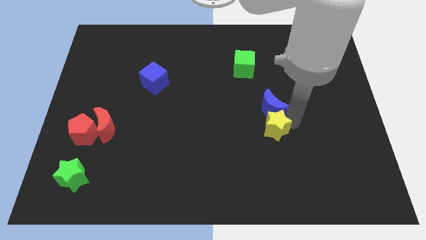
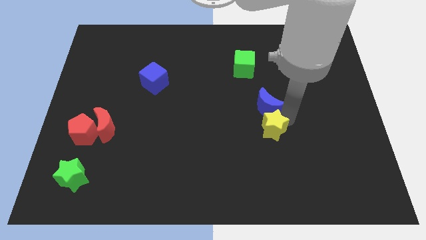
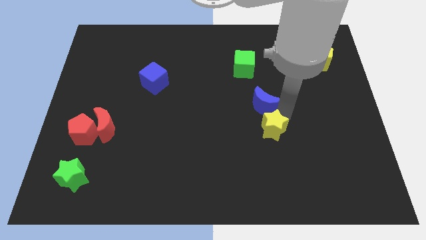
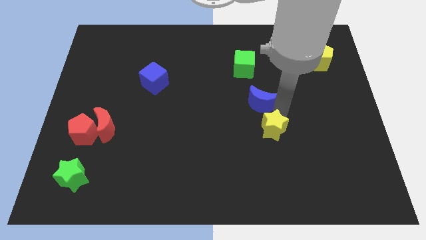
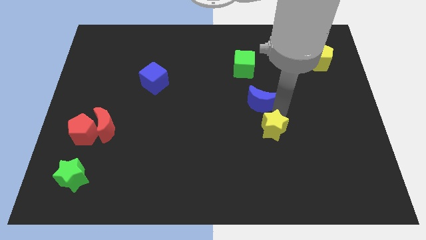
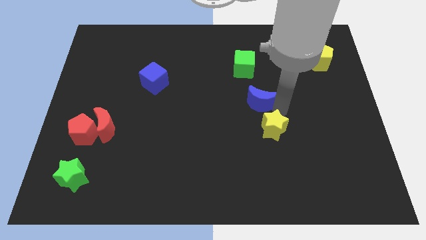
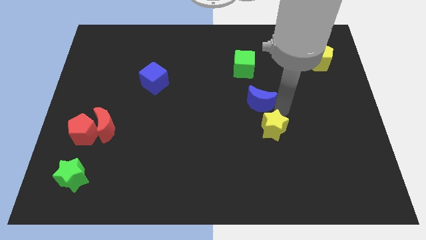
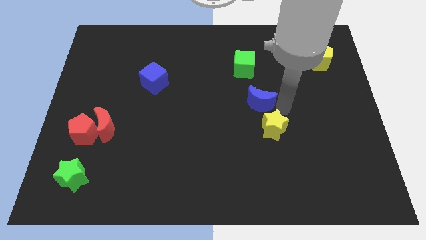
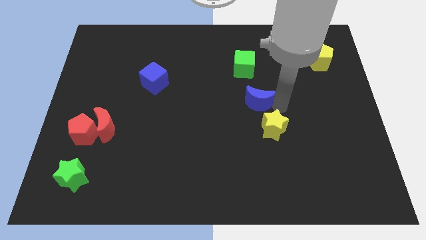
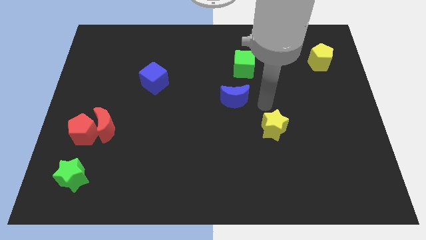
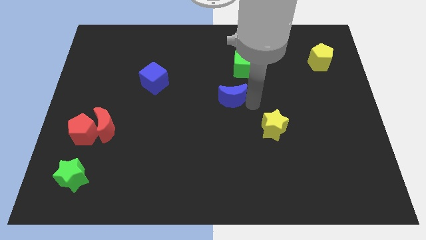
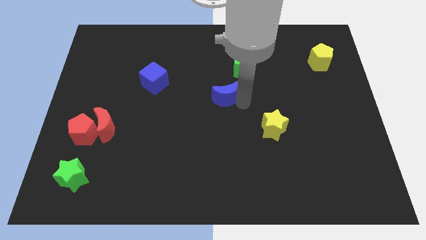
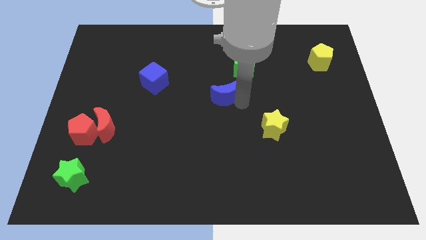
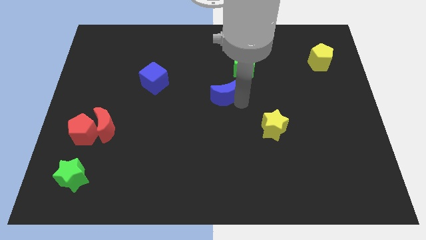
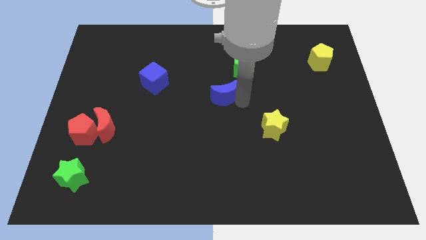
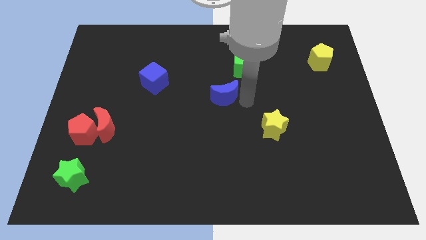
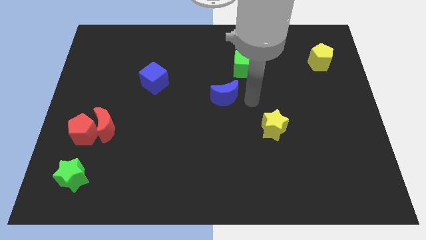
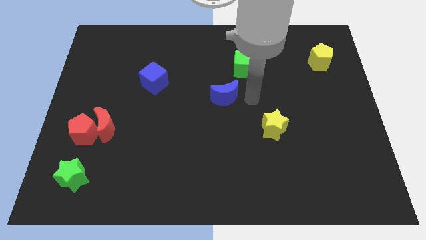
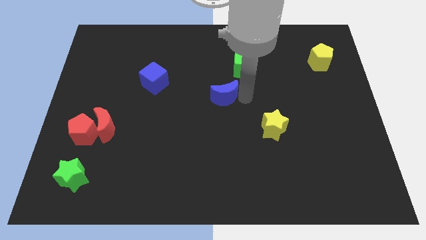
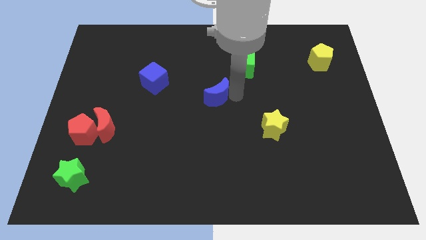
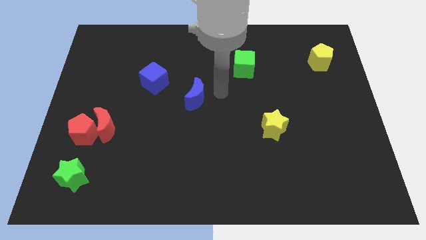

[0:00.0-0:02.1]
move the blue moon towards the blue cube

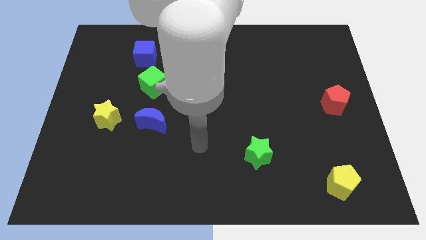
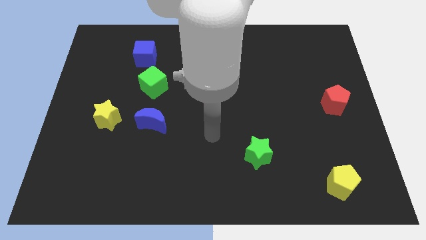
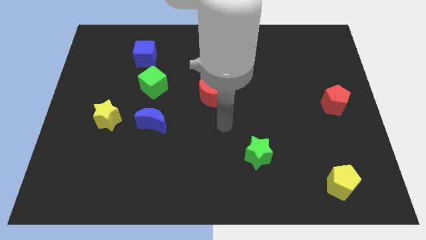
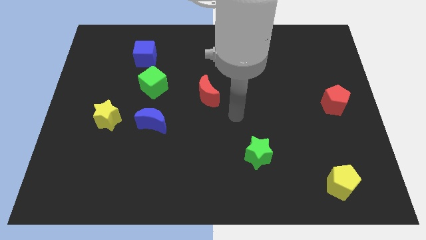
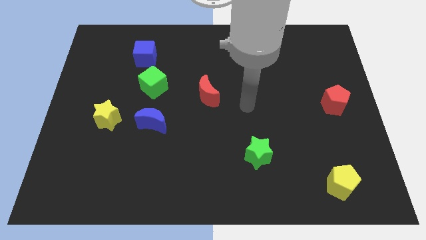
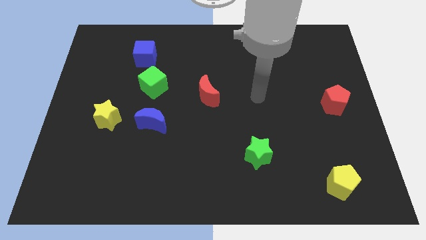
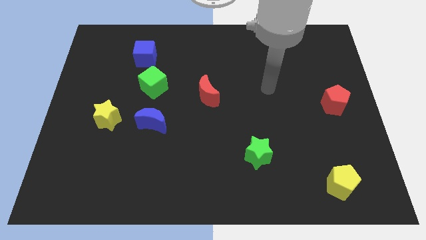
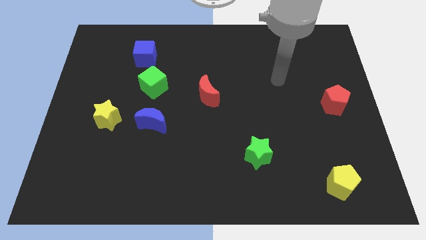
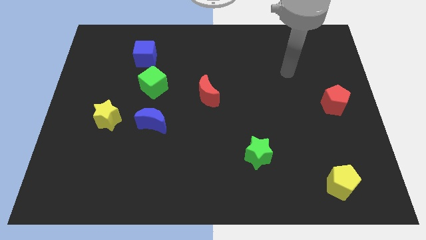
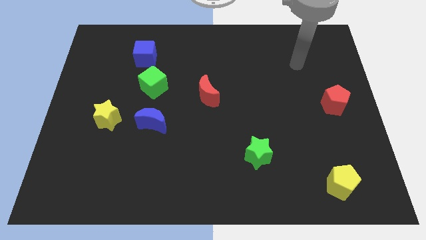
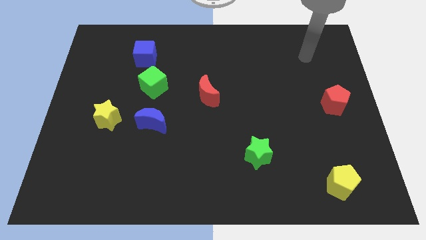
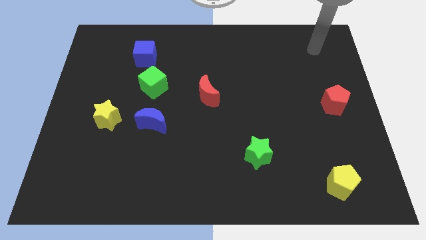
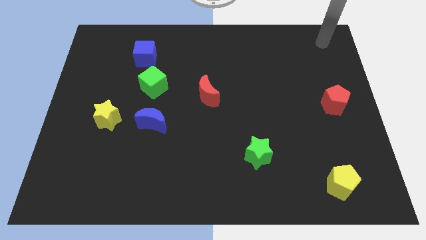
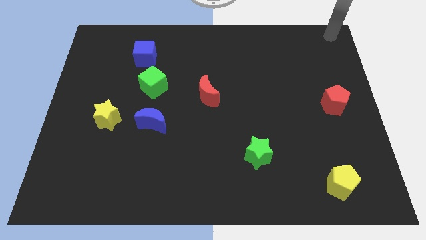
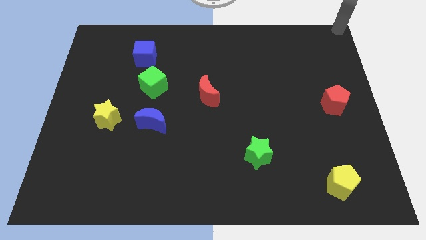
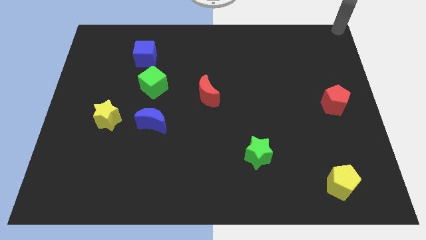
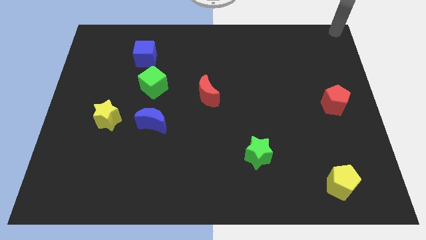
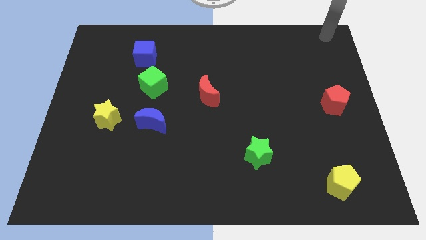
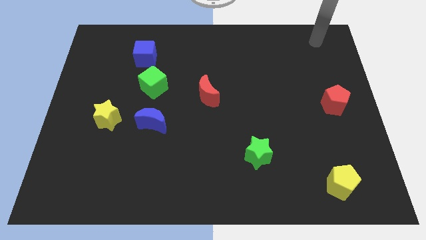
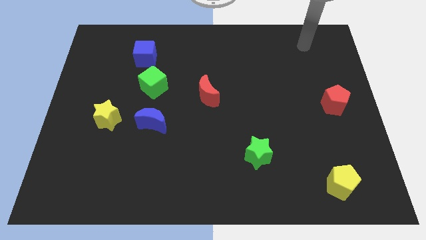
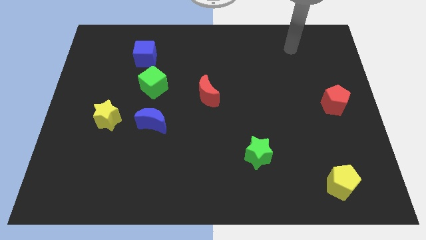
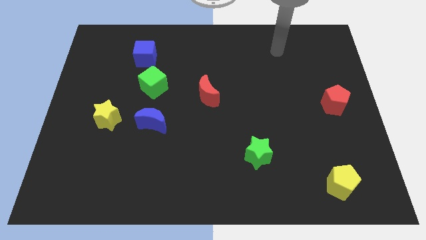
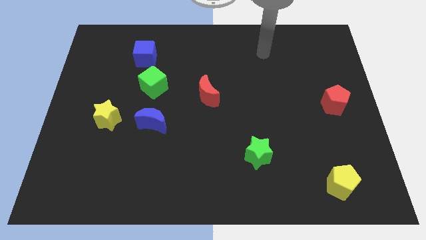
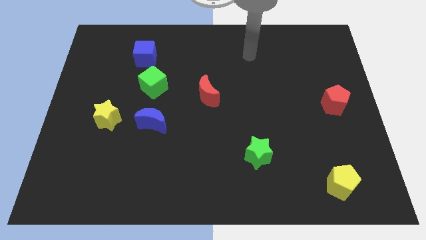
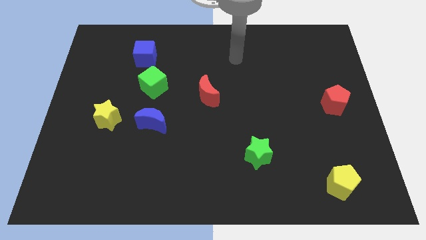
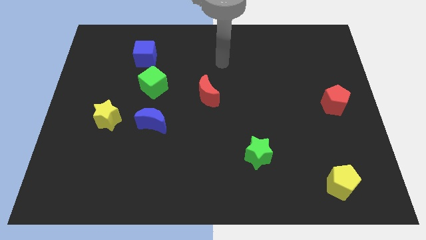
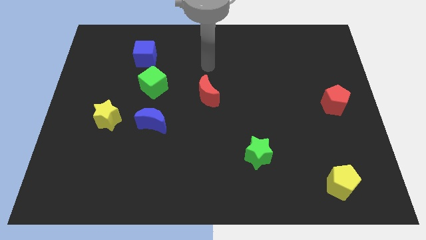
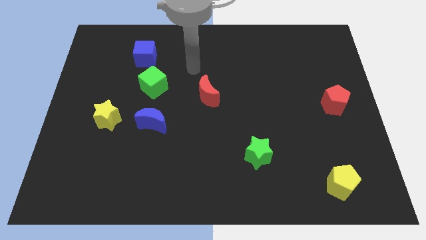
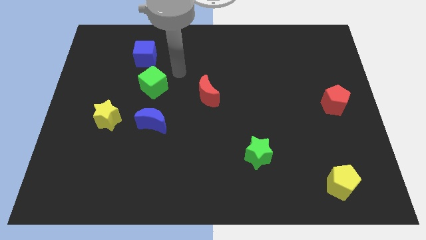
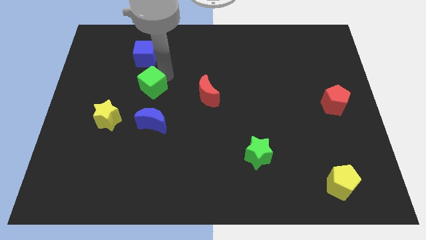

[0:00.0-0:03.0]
move your arm towards the green cube

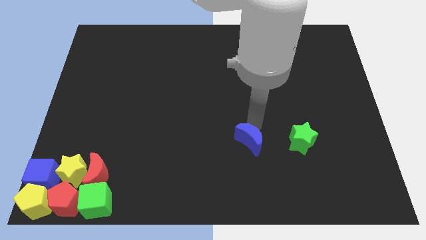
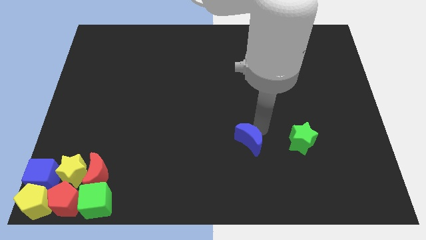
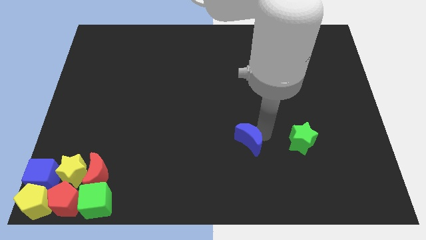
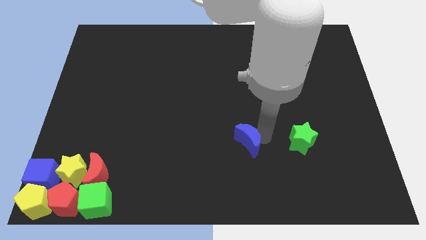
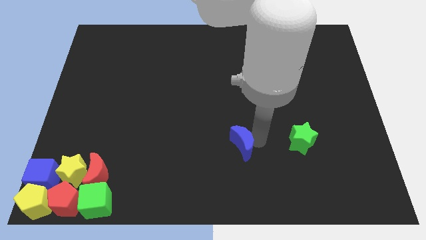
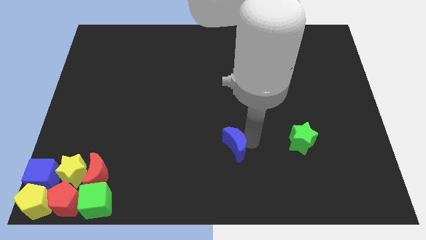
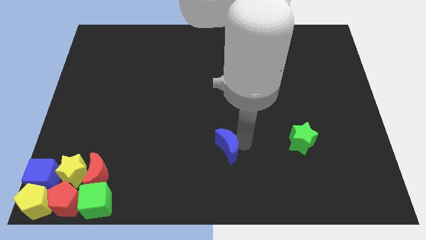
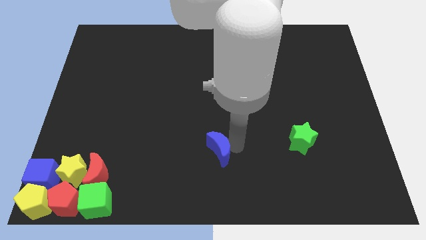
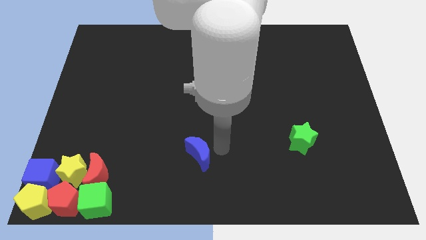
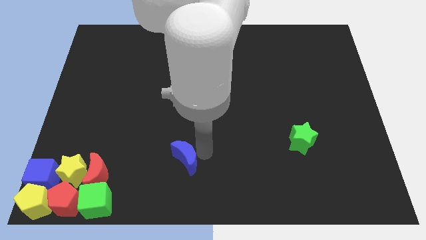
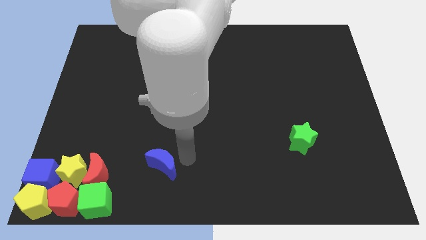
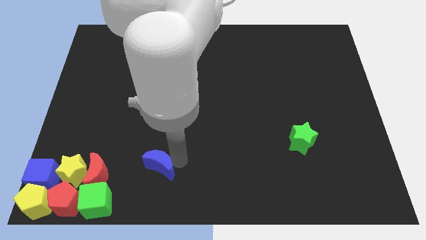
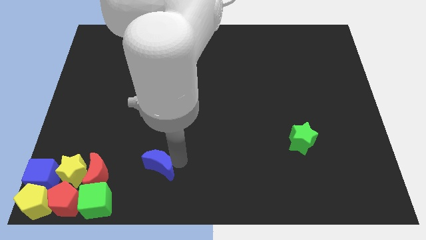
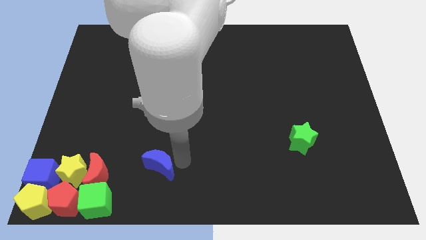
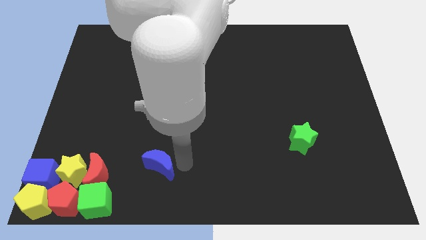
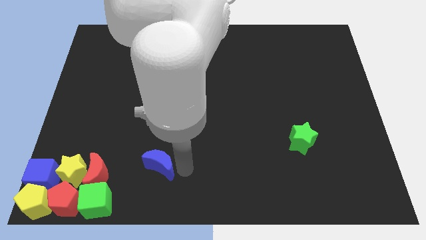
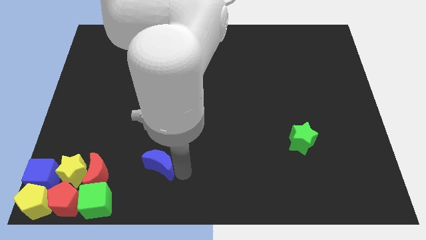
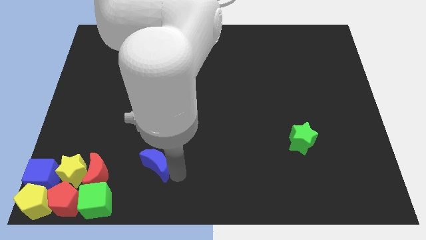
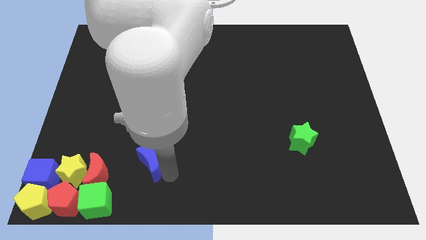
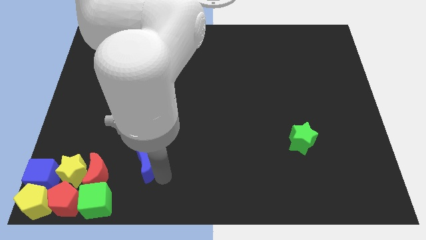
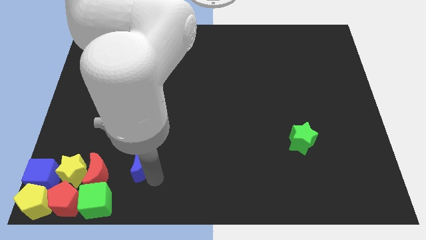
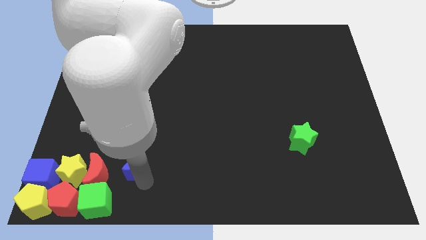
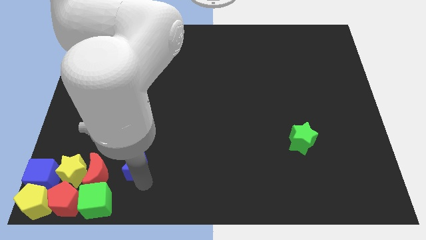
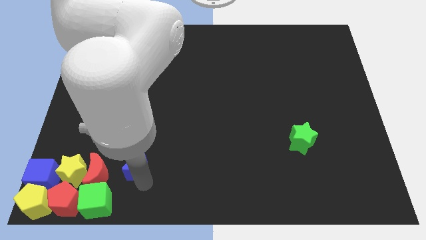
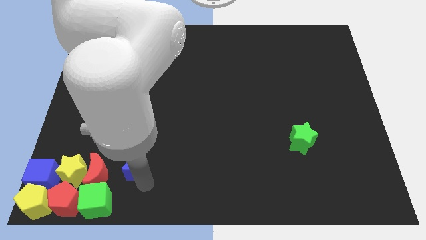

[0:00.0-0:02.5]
place the blue moon above the red moon

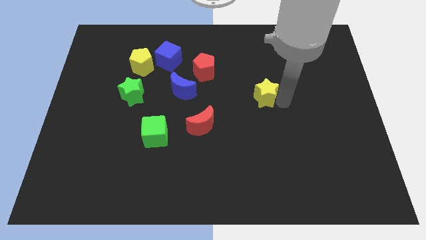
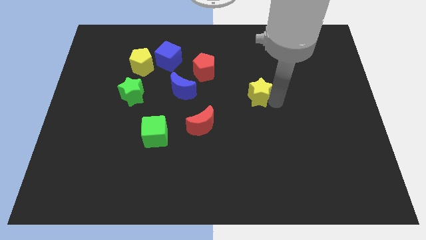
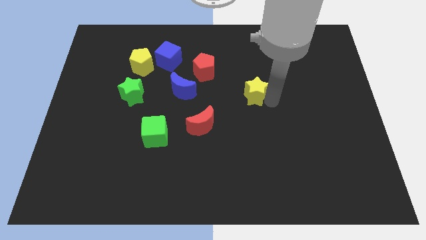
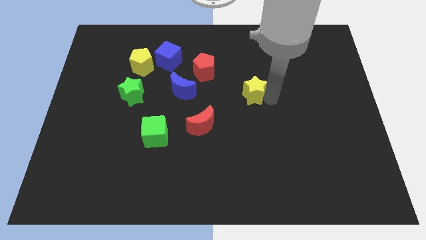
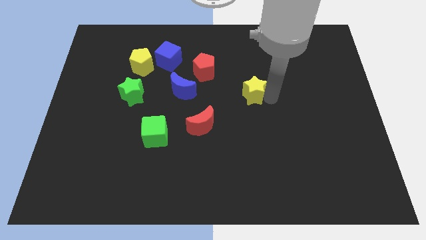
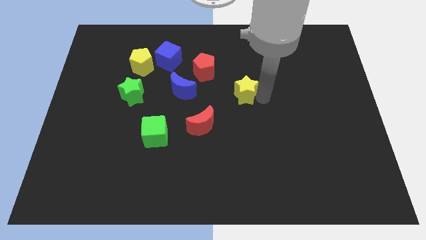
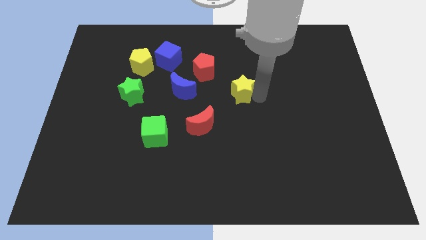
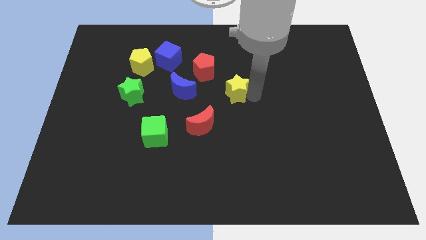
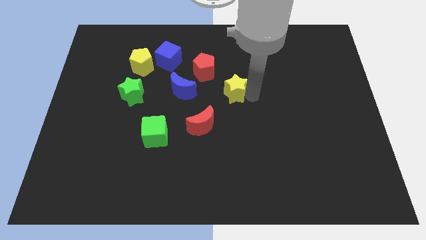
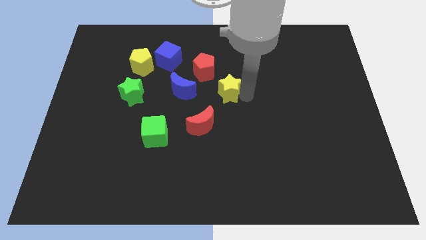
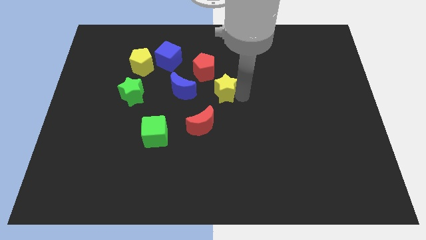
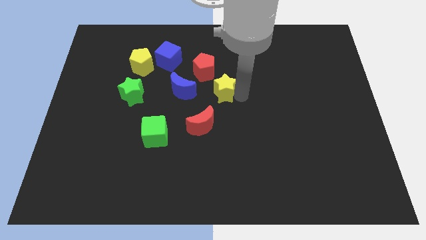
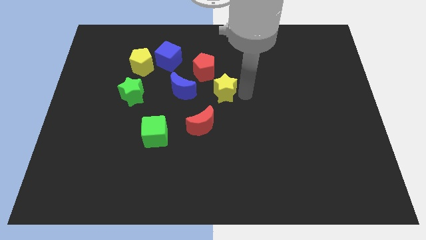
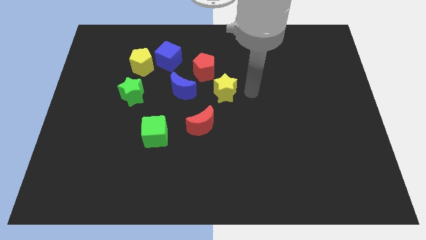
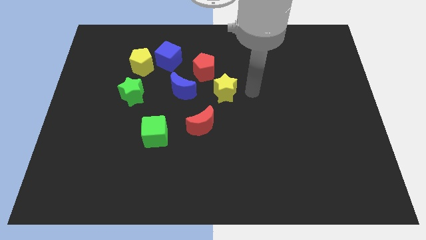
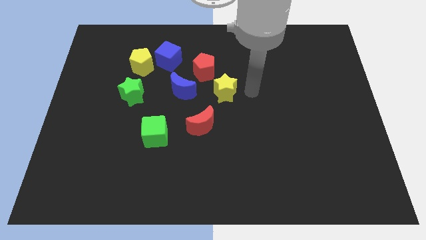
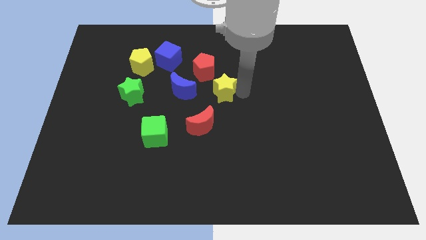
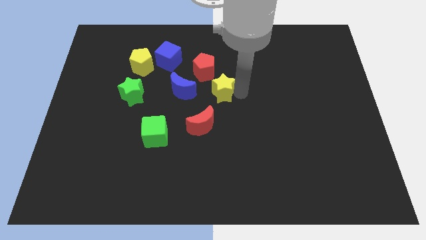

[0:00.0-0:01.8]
move yellow star in between the red pentagon and red crescent
